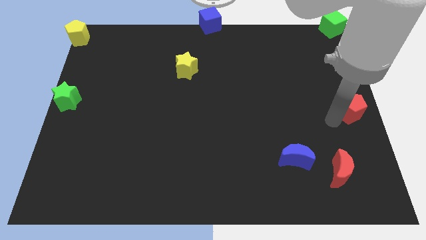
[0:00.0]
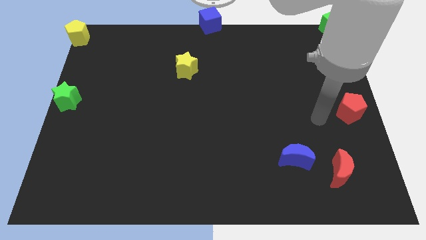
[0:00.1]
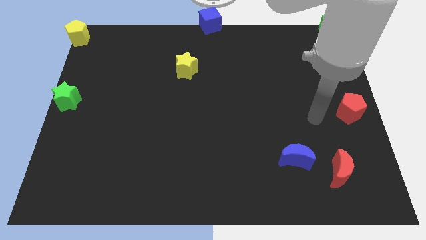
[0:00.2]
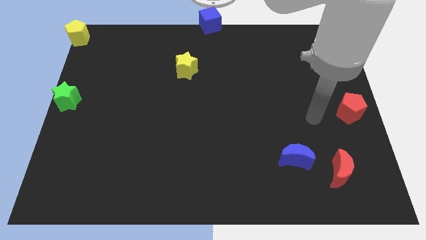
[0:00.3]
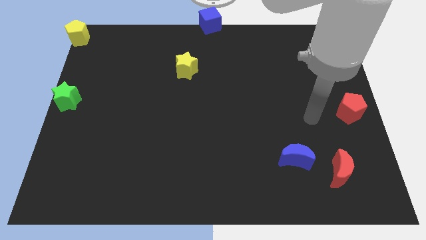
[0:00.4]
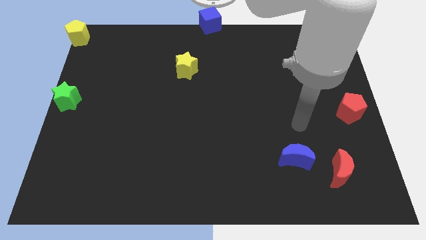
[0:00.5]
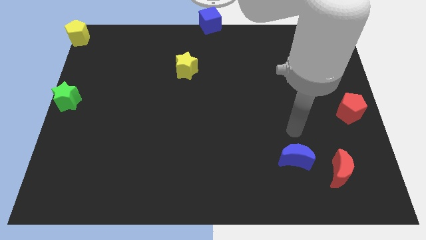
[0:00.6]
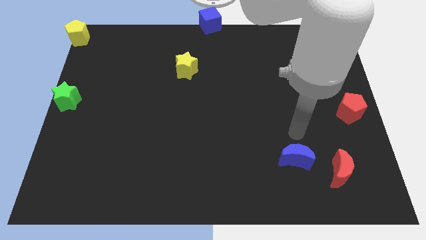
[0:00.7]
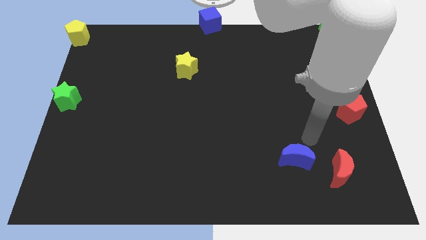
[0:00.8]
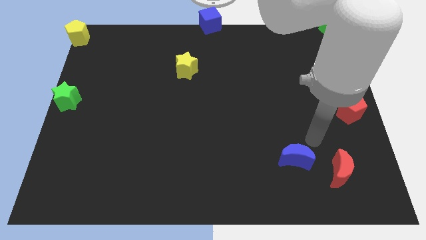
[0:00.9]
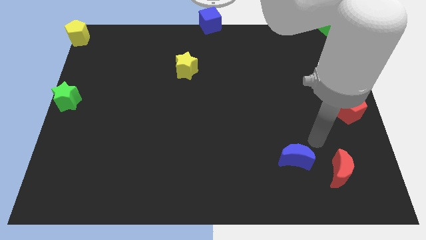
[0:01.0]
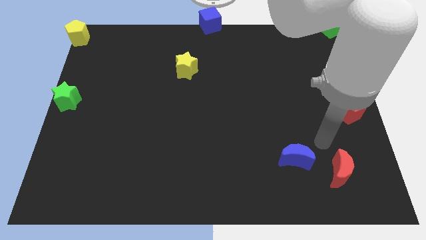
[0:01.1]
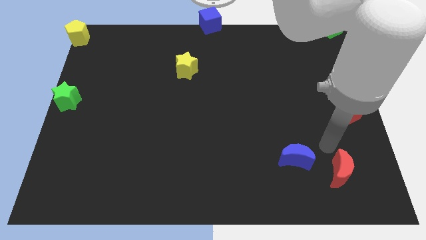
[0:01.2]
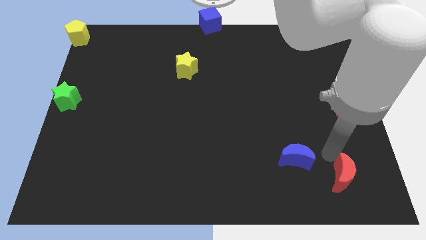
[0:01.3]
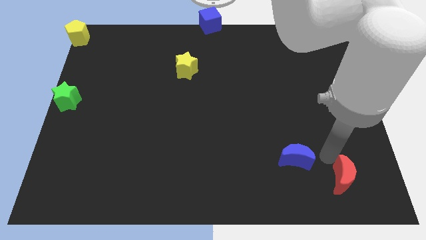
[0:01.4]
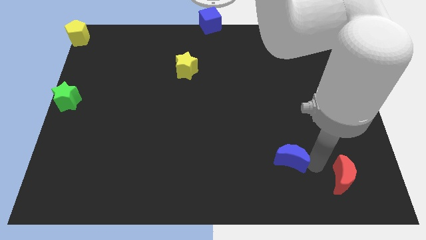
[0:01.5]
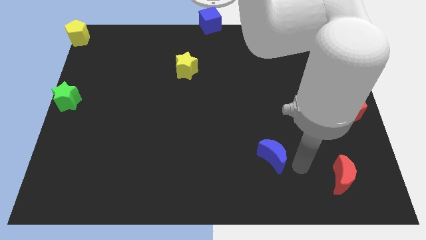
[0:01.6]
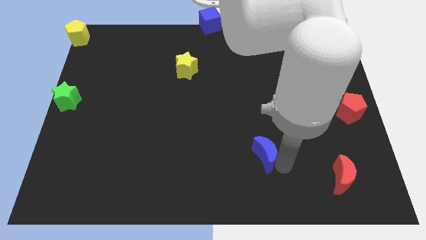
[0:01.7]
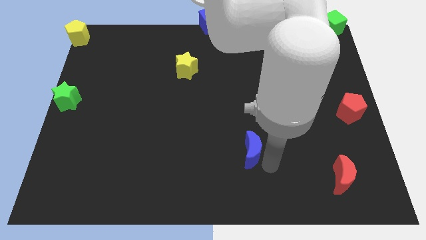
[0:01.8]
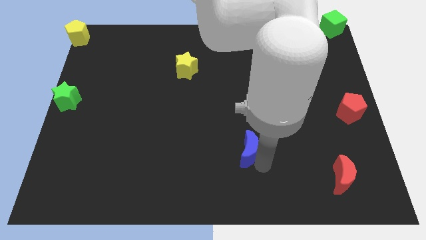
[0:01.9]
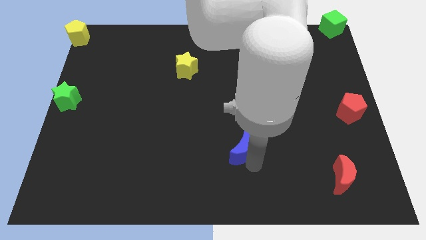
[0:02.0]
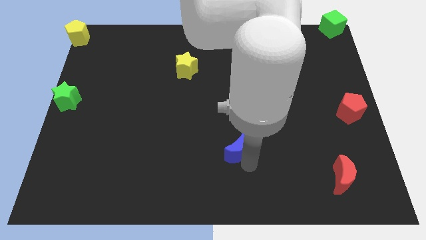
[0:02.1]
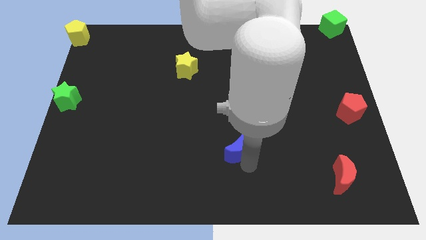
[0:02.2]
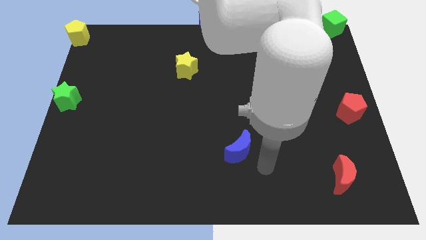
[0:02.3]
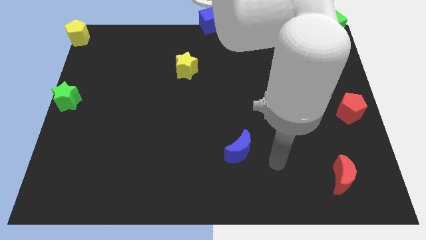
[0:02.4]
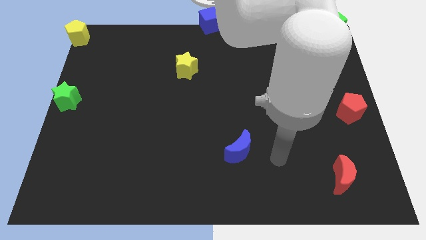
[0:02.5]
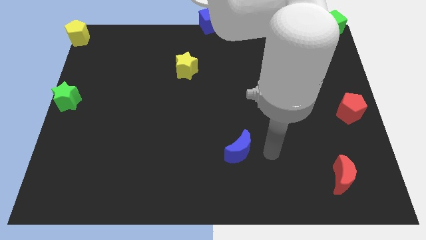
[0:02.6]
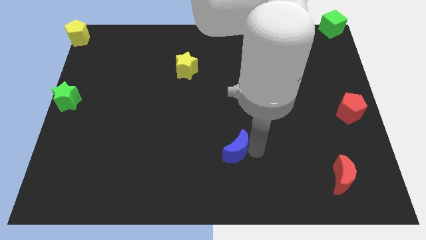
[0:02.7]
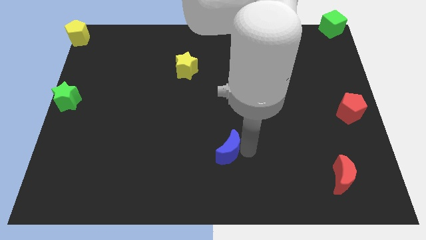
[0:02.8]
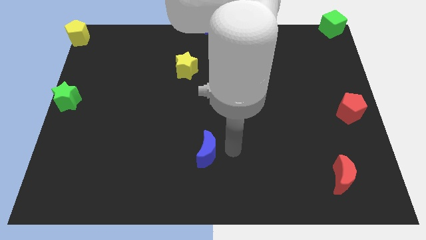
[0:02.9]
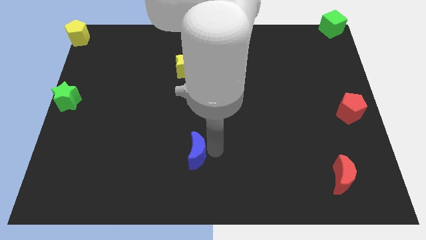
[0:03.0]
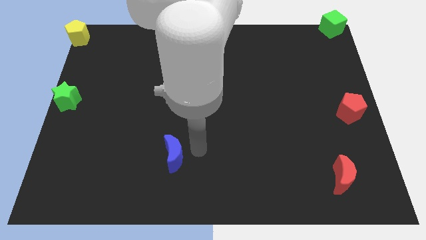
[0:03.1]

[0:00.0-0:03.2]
move the blue crescent to the left side of the board

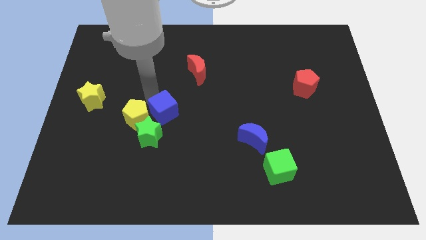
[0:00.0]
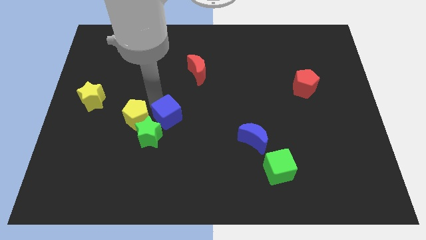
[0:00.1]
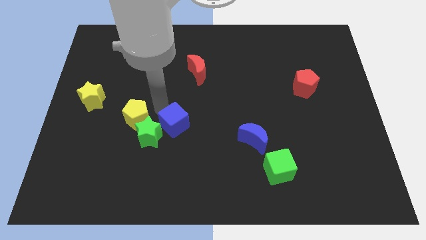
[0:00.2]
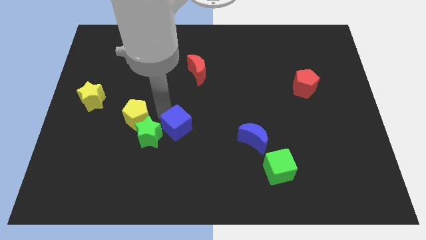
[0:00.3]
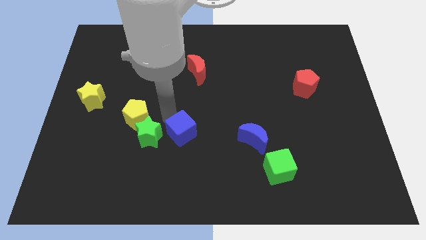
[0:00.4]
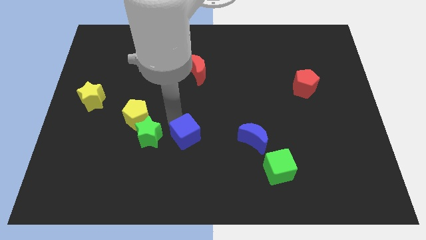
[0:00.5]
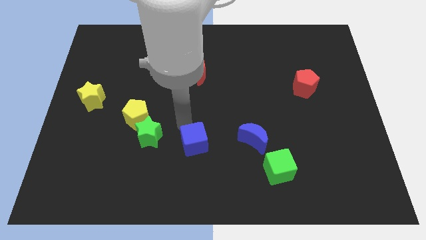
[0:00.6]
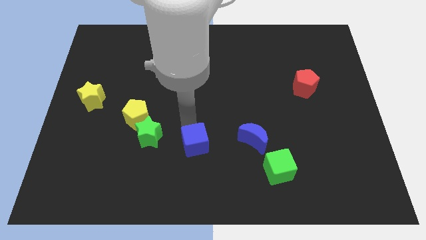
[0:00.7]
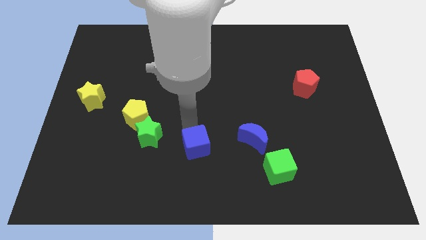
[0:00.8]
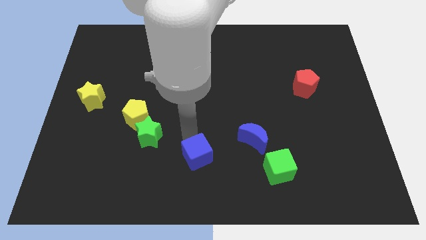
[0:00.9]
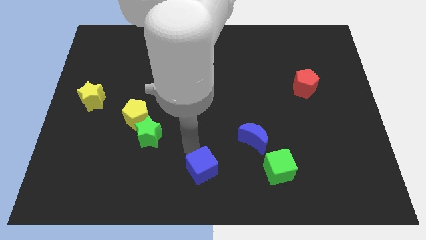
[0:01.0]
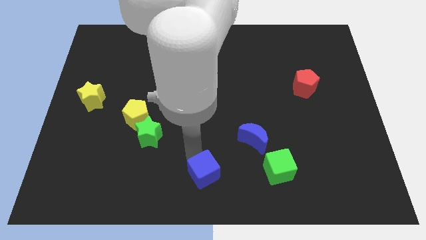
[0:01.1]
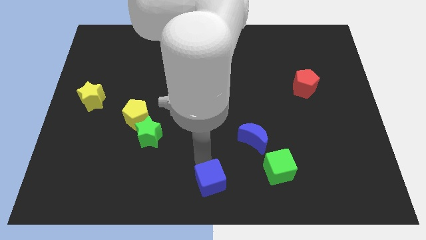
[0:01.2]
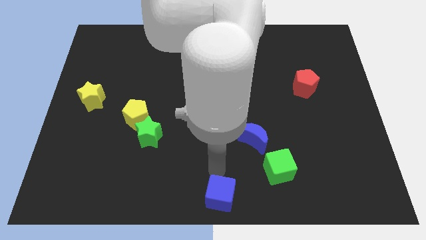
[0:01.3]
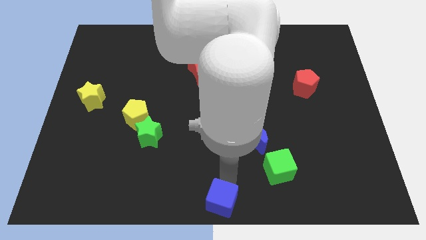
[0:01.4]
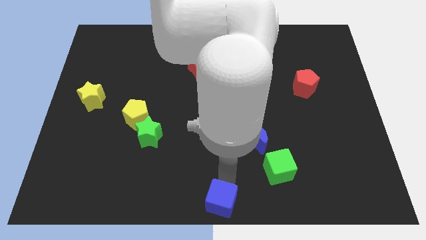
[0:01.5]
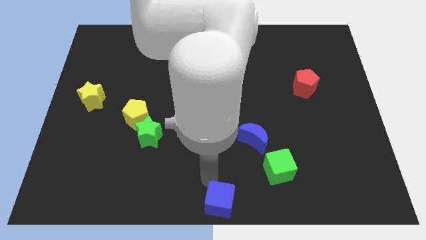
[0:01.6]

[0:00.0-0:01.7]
move the blue cube to the bottom center

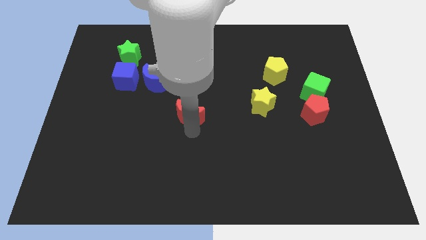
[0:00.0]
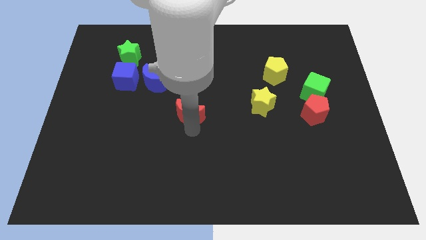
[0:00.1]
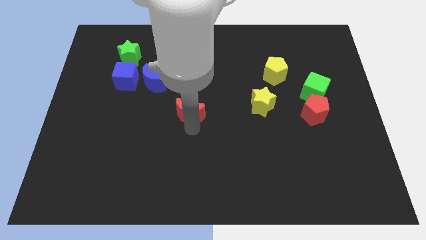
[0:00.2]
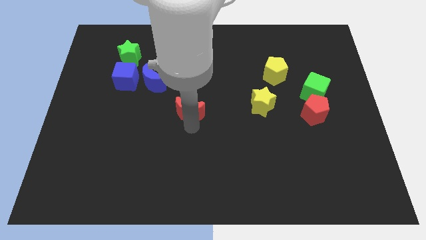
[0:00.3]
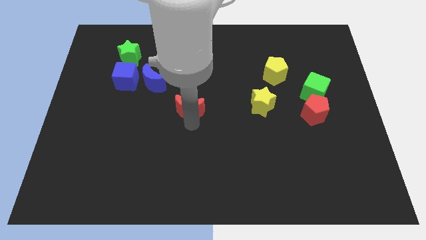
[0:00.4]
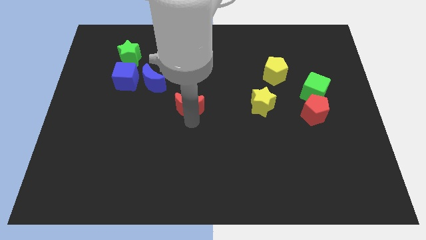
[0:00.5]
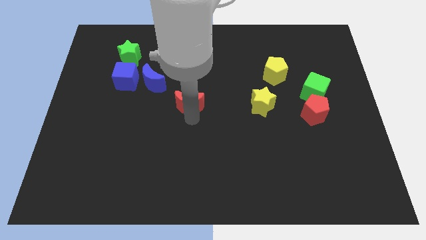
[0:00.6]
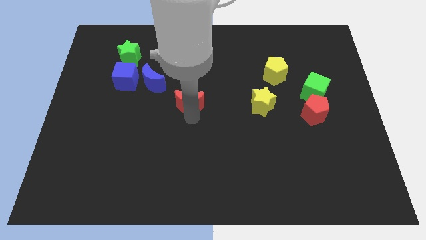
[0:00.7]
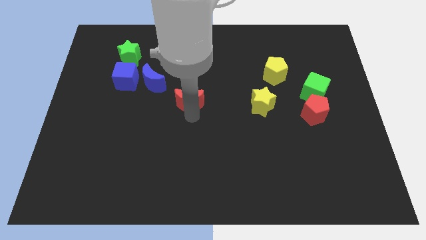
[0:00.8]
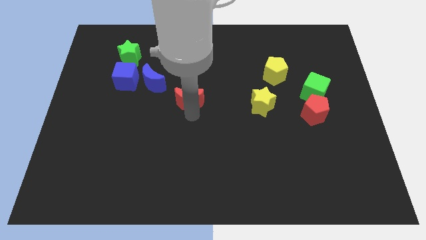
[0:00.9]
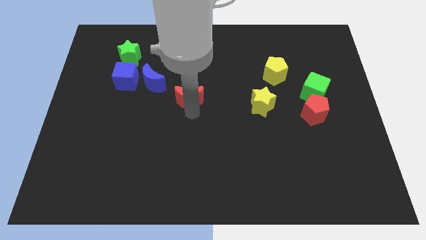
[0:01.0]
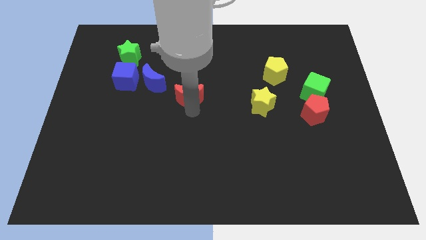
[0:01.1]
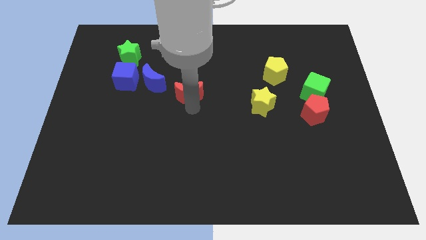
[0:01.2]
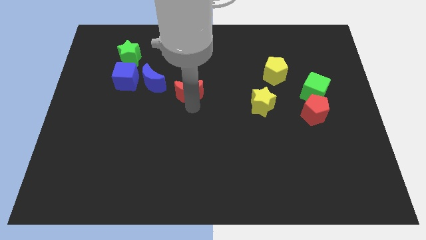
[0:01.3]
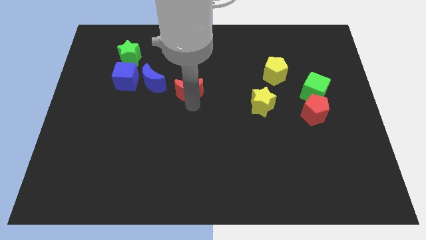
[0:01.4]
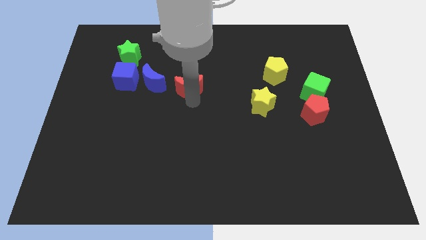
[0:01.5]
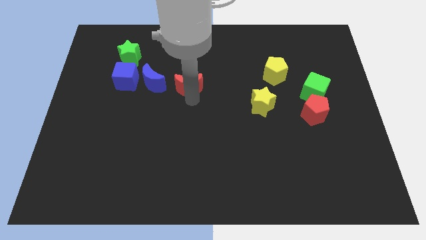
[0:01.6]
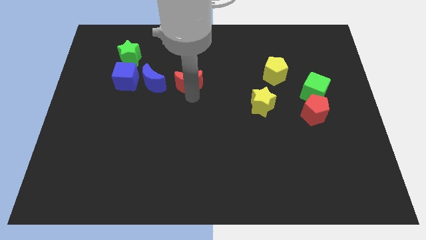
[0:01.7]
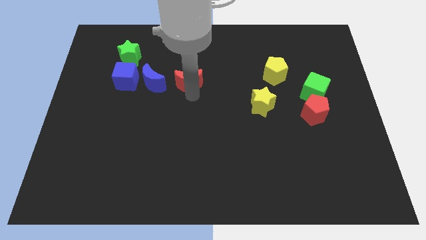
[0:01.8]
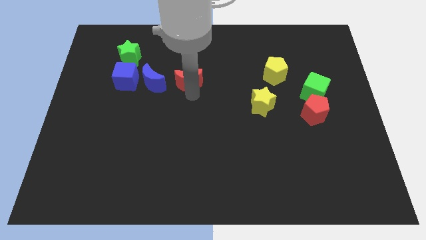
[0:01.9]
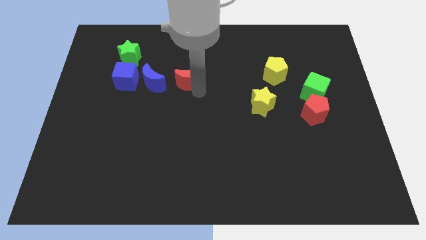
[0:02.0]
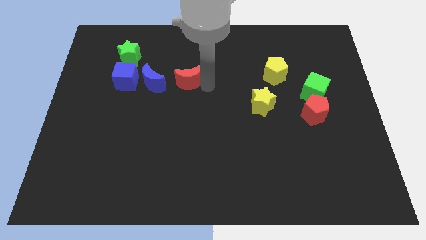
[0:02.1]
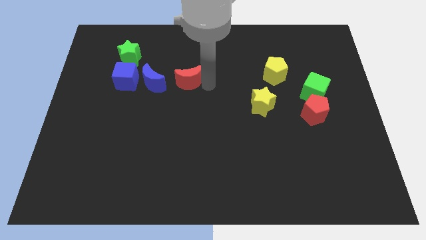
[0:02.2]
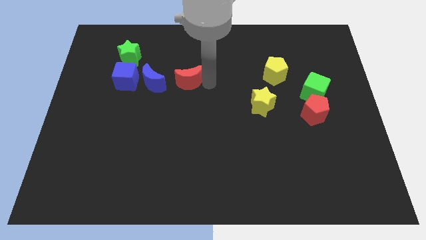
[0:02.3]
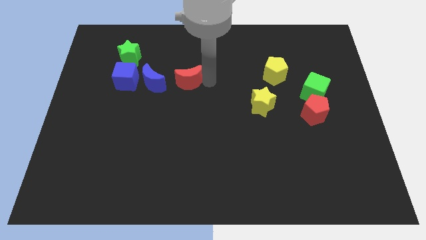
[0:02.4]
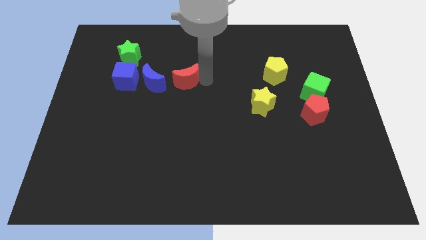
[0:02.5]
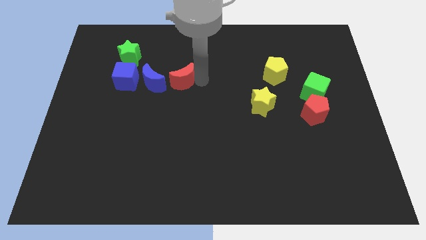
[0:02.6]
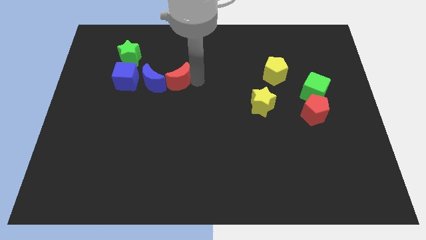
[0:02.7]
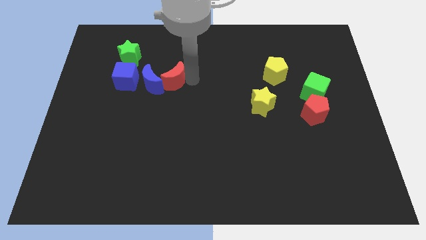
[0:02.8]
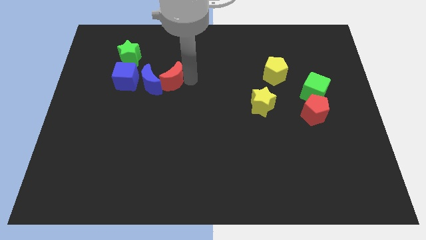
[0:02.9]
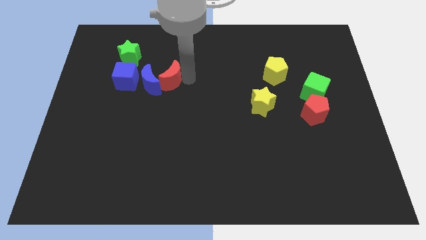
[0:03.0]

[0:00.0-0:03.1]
move red moon into blue moon

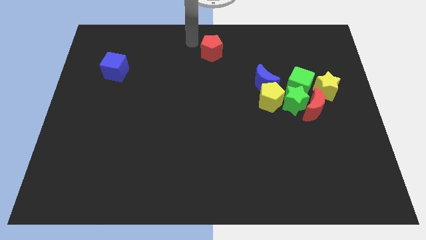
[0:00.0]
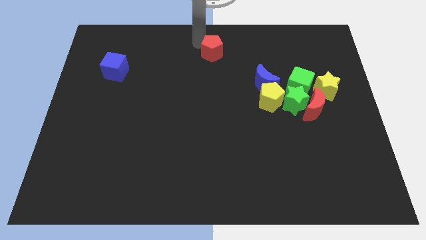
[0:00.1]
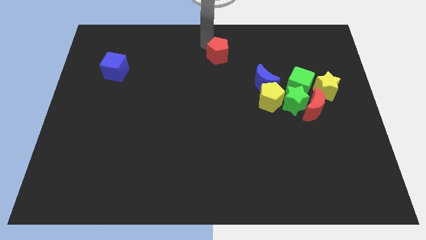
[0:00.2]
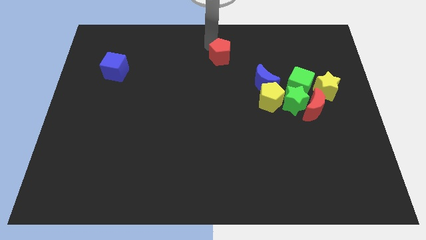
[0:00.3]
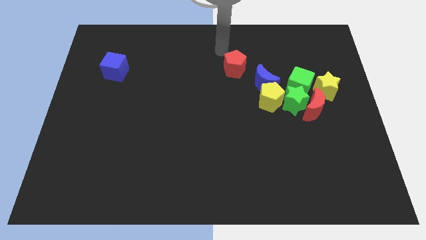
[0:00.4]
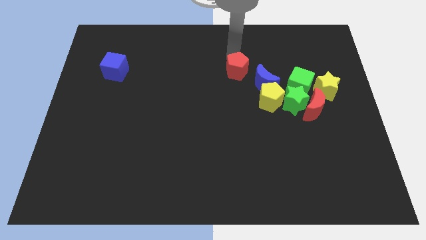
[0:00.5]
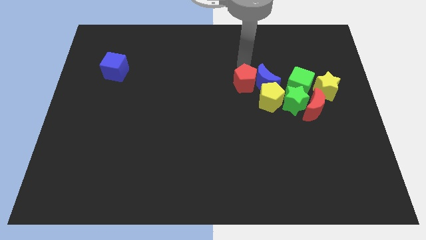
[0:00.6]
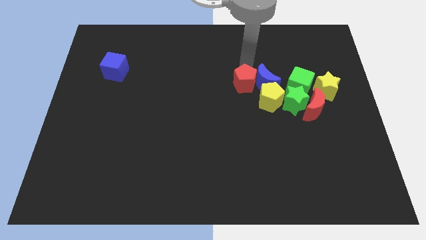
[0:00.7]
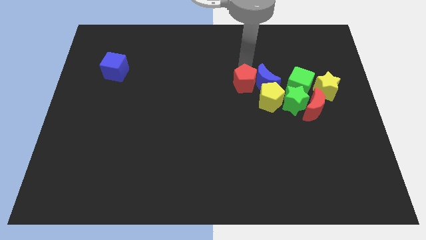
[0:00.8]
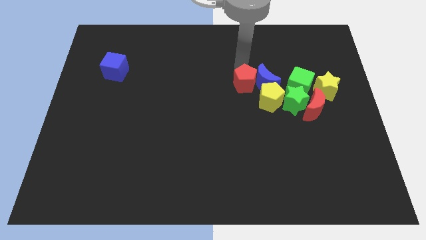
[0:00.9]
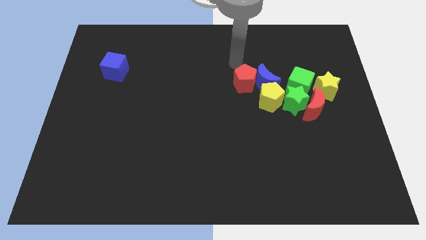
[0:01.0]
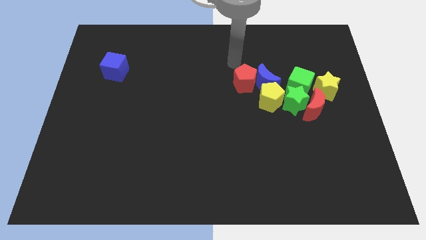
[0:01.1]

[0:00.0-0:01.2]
move the red pentagon left to the blue crescent
